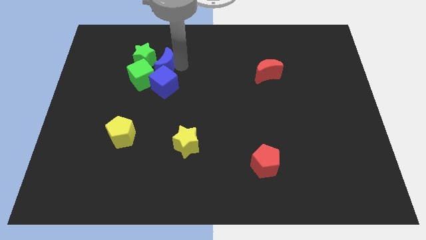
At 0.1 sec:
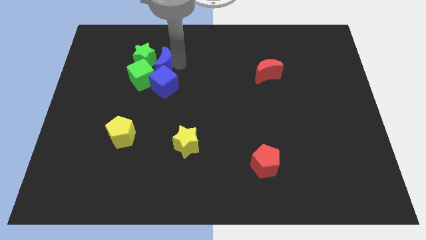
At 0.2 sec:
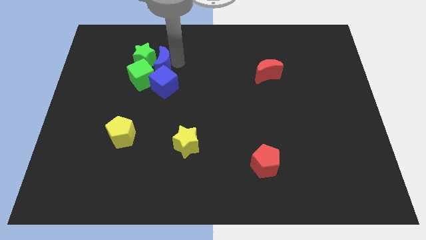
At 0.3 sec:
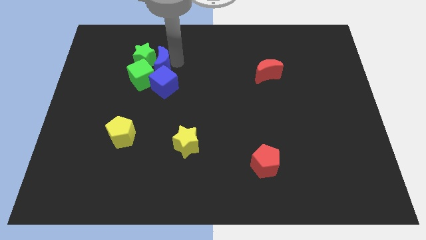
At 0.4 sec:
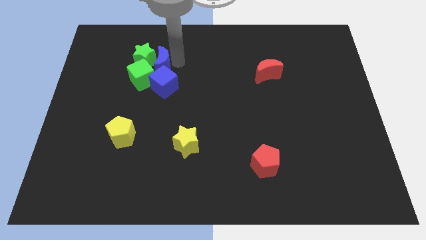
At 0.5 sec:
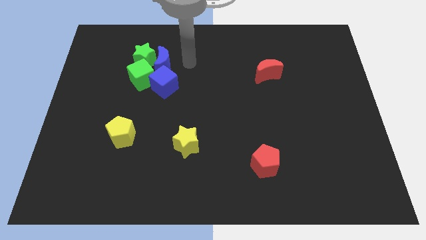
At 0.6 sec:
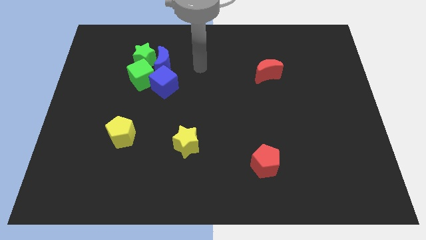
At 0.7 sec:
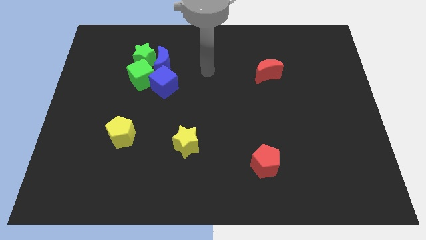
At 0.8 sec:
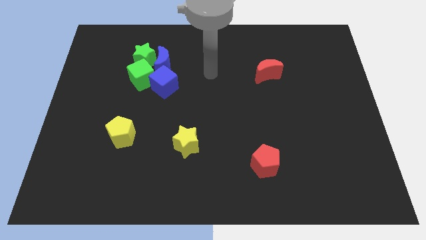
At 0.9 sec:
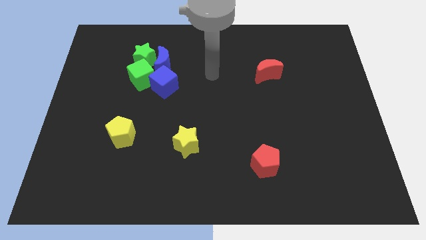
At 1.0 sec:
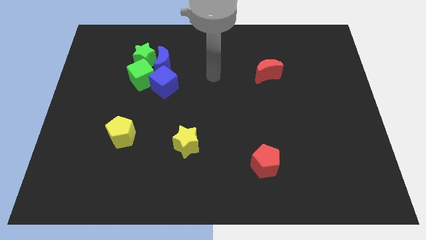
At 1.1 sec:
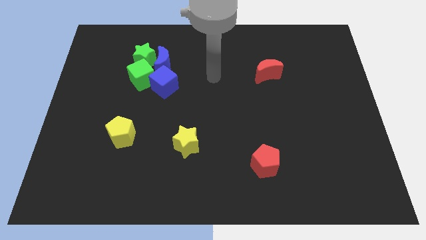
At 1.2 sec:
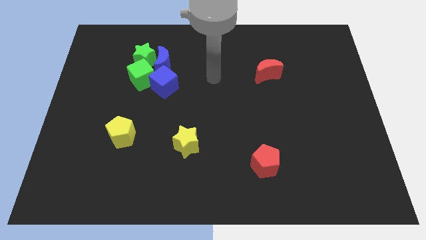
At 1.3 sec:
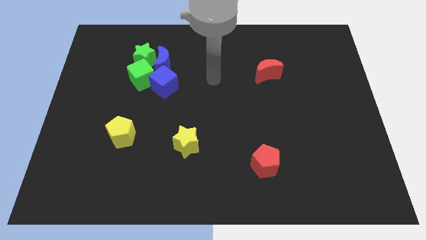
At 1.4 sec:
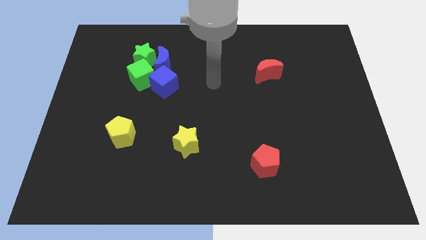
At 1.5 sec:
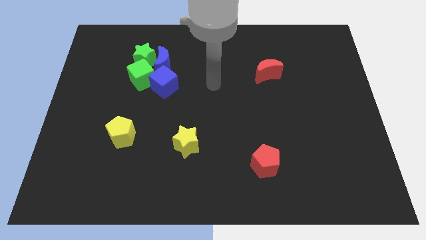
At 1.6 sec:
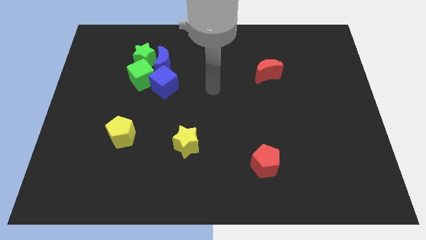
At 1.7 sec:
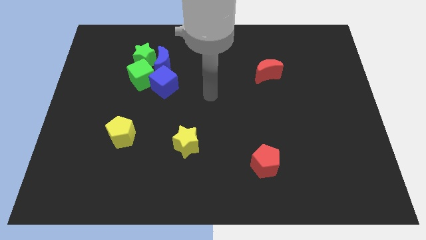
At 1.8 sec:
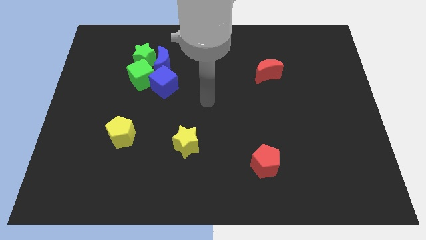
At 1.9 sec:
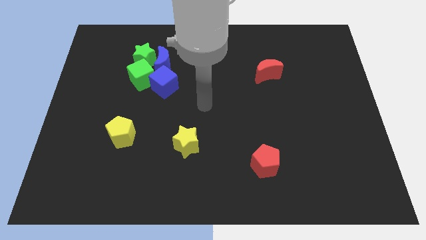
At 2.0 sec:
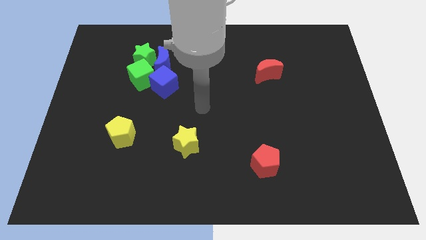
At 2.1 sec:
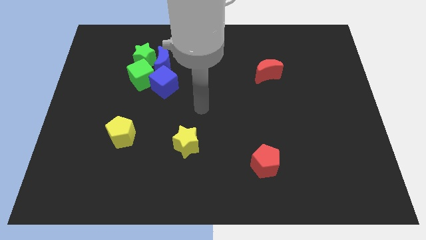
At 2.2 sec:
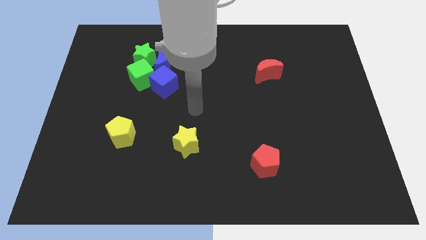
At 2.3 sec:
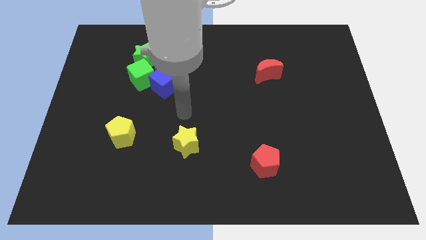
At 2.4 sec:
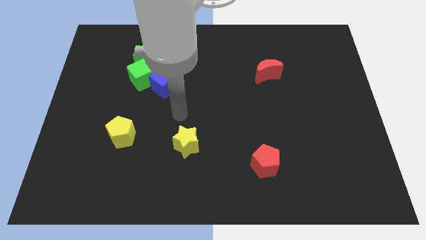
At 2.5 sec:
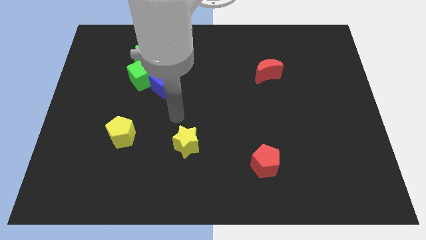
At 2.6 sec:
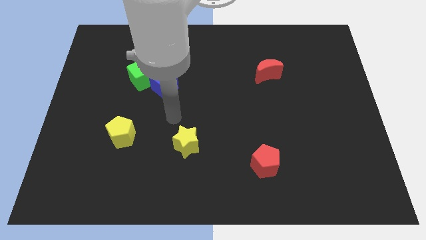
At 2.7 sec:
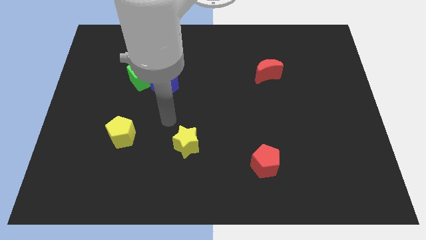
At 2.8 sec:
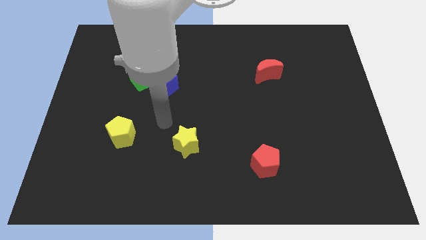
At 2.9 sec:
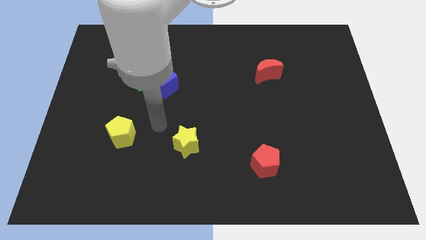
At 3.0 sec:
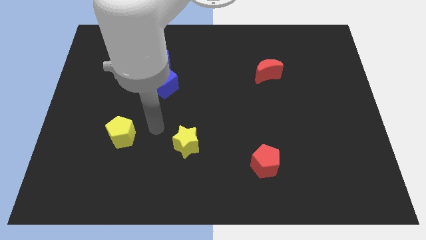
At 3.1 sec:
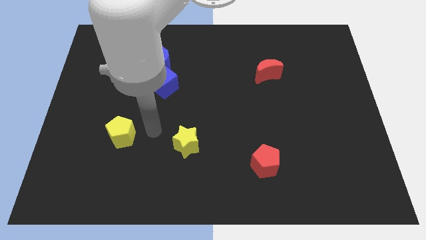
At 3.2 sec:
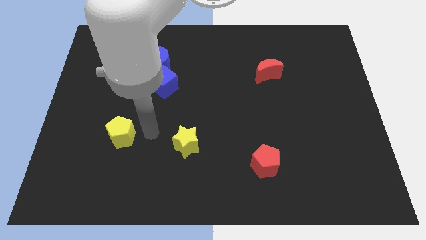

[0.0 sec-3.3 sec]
move the arm right to the yellow pentagon

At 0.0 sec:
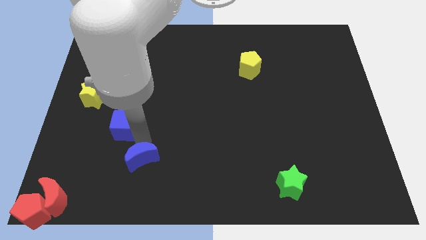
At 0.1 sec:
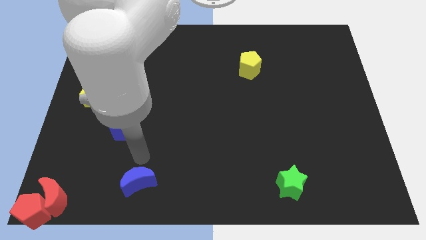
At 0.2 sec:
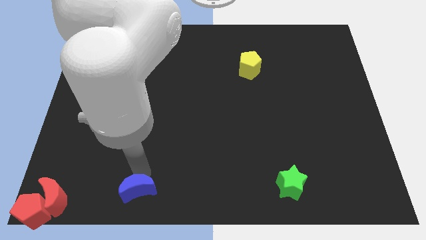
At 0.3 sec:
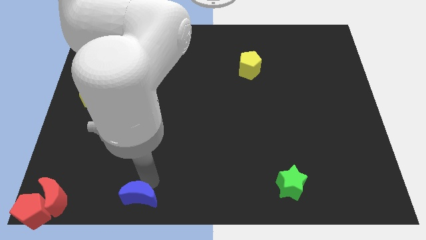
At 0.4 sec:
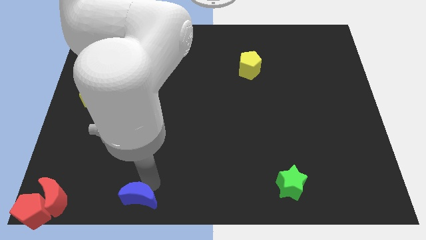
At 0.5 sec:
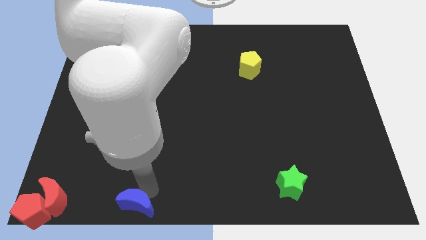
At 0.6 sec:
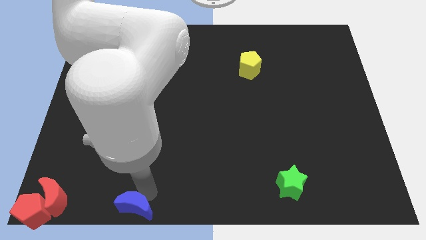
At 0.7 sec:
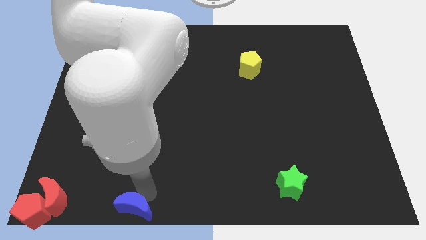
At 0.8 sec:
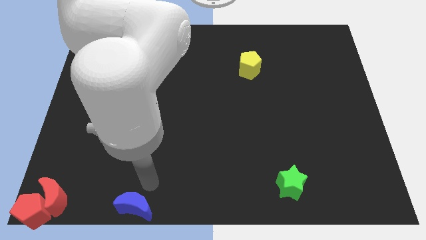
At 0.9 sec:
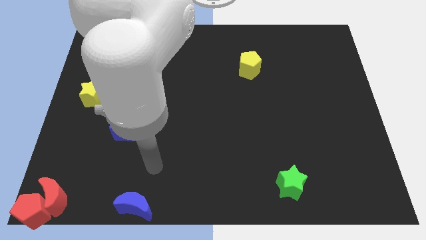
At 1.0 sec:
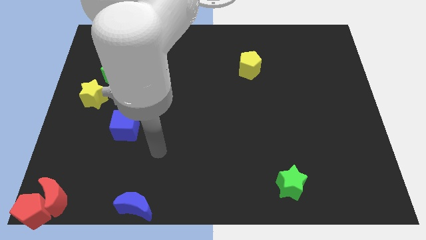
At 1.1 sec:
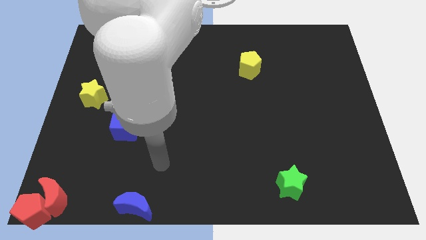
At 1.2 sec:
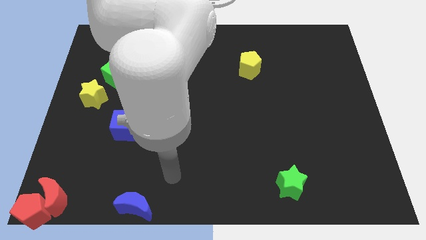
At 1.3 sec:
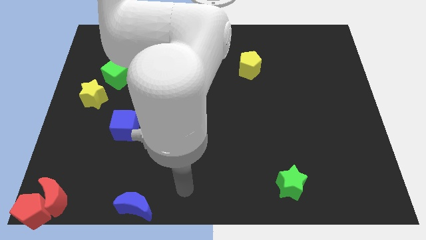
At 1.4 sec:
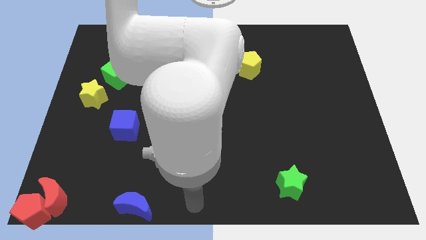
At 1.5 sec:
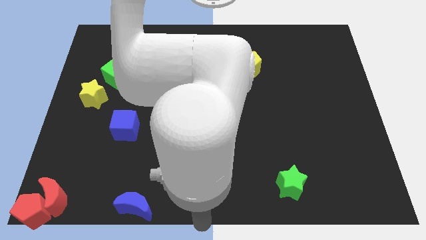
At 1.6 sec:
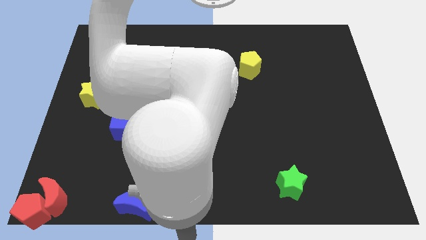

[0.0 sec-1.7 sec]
slide the blue moon parallel right to the red moon

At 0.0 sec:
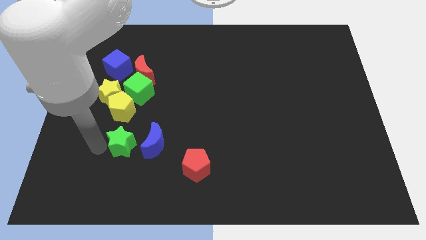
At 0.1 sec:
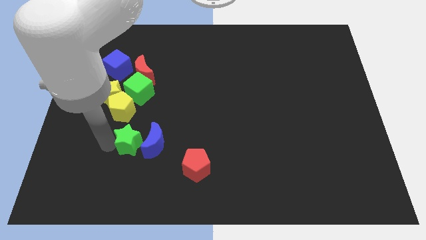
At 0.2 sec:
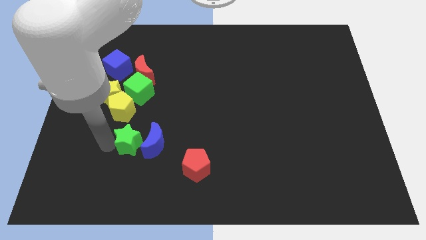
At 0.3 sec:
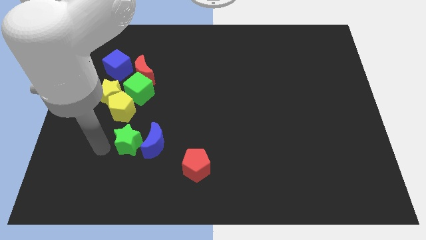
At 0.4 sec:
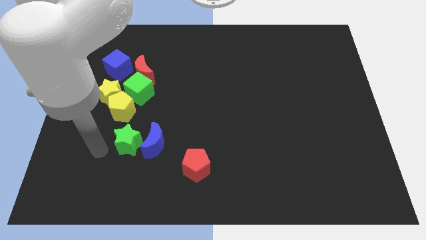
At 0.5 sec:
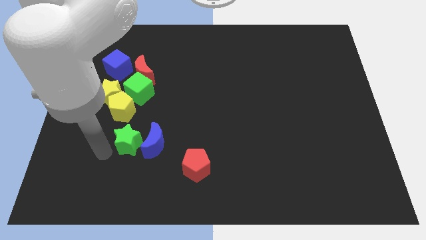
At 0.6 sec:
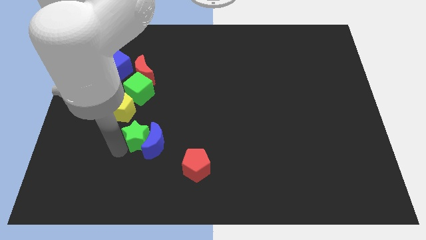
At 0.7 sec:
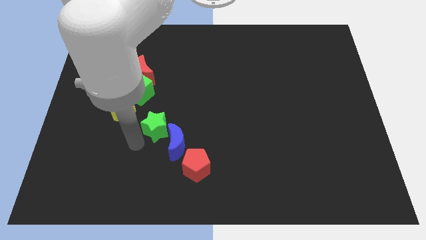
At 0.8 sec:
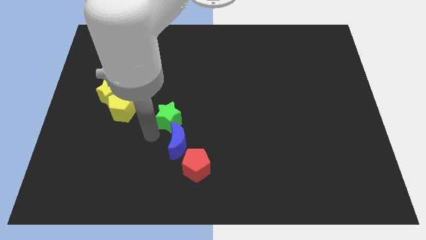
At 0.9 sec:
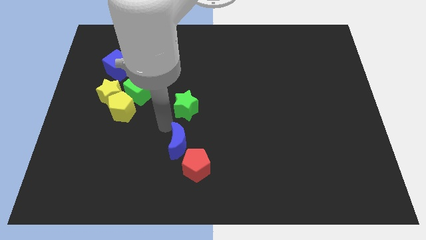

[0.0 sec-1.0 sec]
push the green star into the blue crescent

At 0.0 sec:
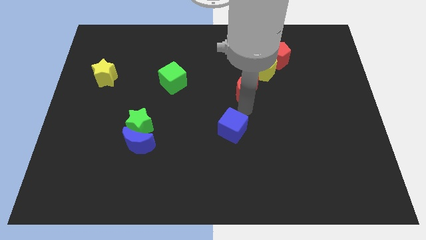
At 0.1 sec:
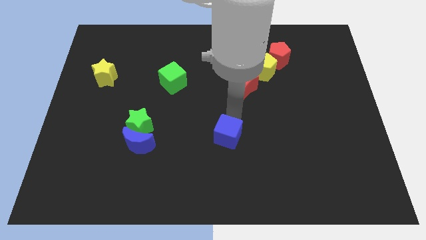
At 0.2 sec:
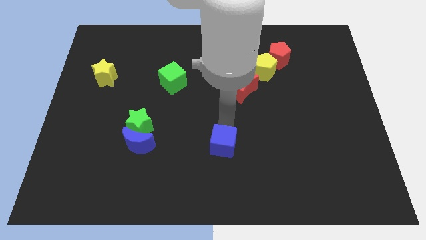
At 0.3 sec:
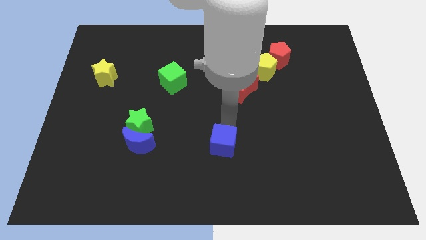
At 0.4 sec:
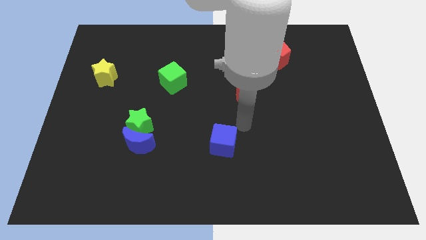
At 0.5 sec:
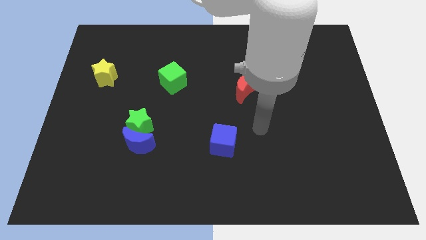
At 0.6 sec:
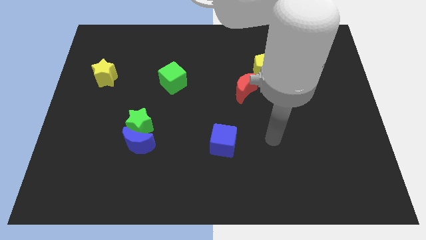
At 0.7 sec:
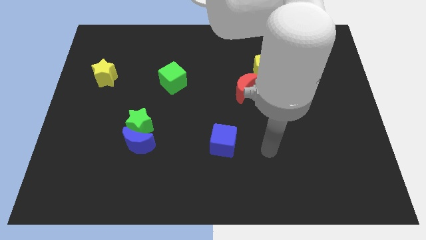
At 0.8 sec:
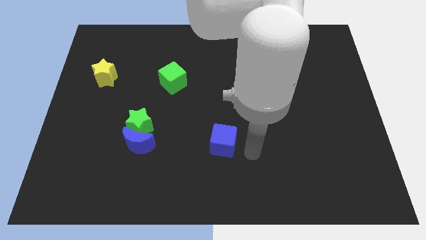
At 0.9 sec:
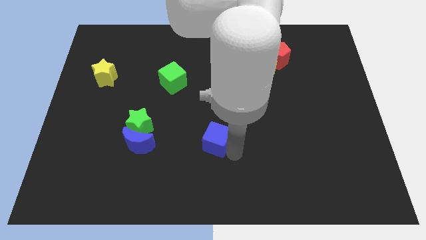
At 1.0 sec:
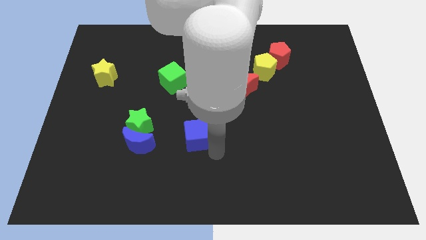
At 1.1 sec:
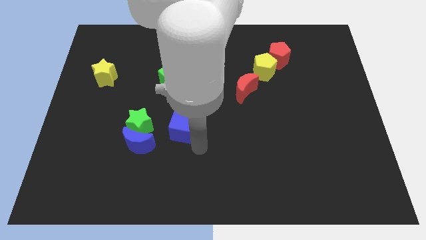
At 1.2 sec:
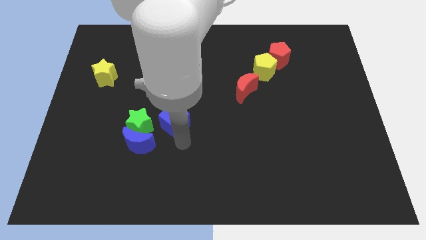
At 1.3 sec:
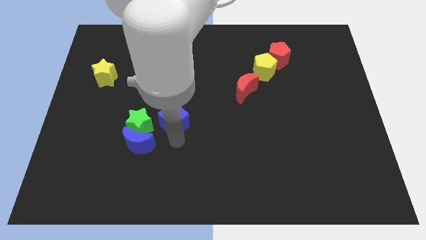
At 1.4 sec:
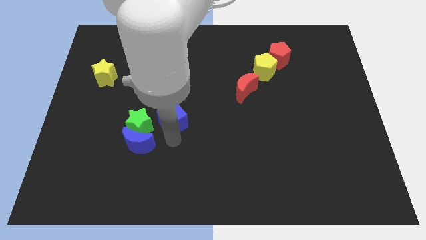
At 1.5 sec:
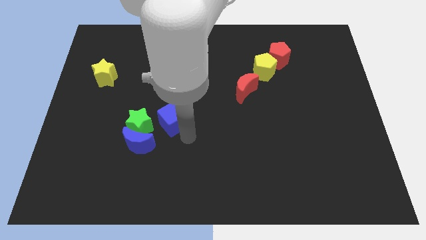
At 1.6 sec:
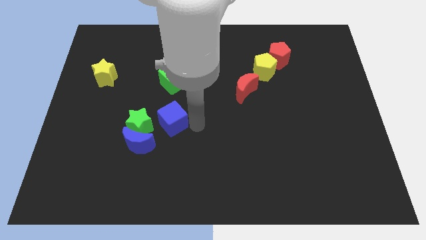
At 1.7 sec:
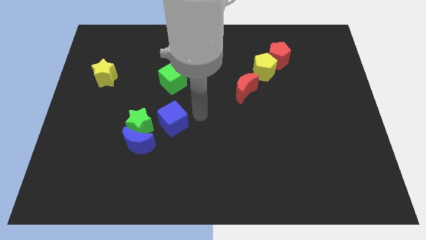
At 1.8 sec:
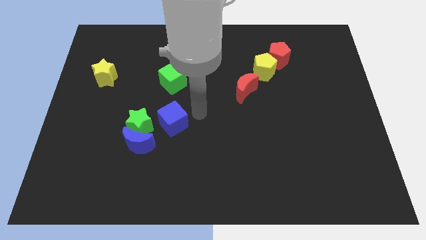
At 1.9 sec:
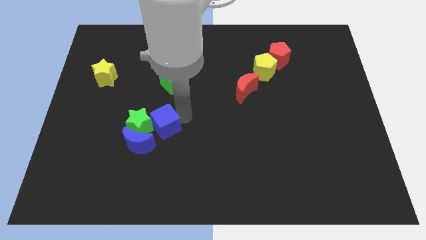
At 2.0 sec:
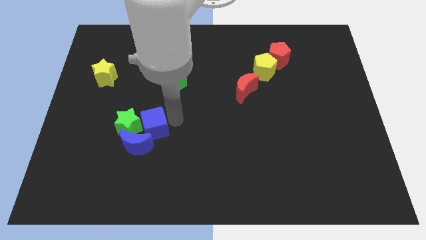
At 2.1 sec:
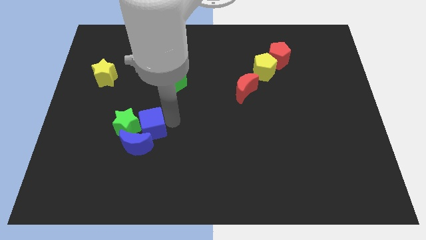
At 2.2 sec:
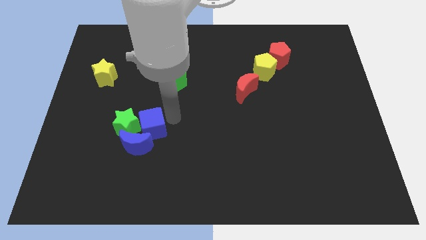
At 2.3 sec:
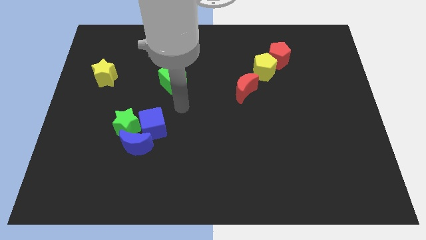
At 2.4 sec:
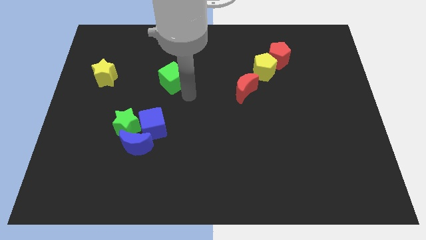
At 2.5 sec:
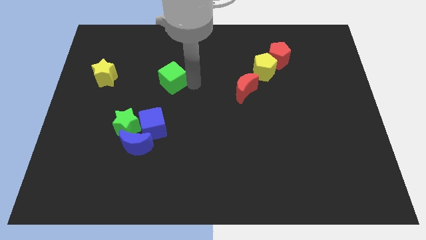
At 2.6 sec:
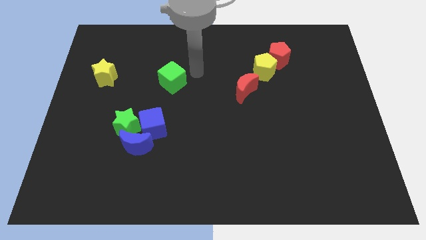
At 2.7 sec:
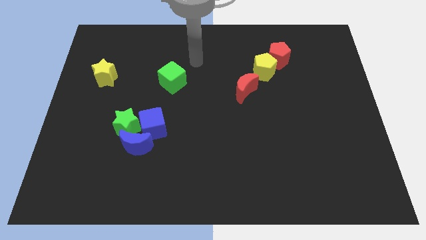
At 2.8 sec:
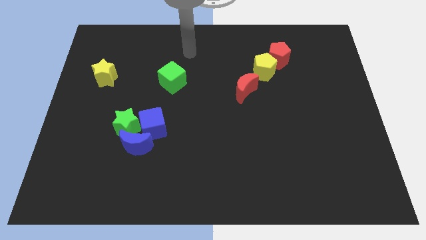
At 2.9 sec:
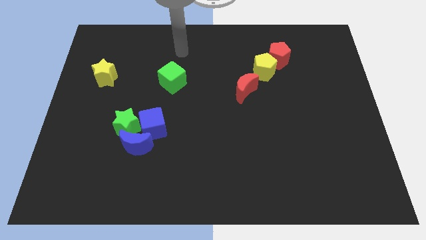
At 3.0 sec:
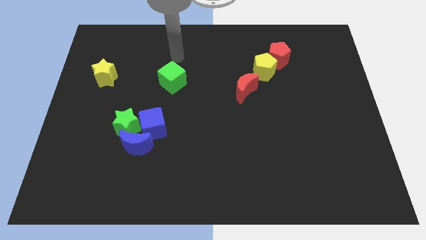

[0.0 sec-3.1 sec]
push the blue cube diagonally bottom left to the green cube
